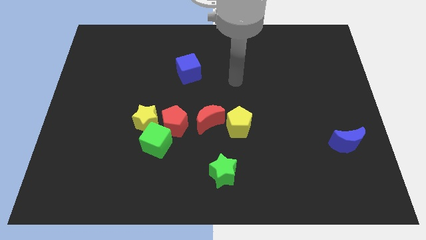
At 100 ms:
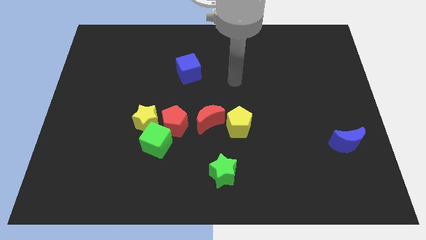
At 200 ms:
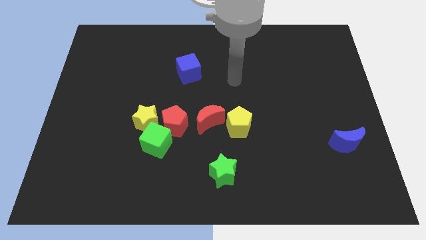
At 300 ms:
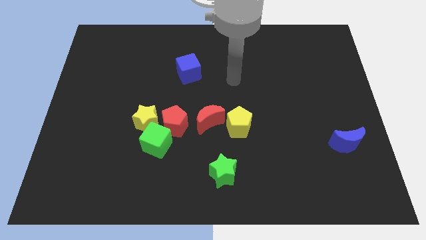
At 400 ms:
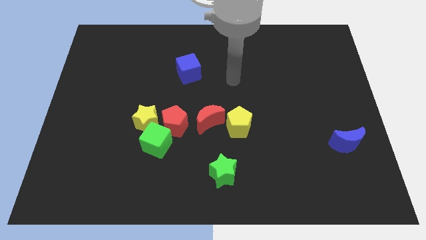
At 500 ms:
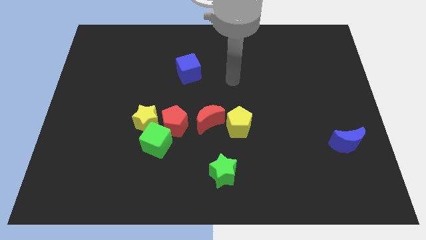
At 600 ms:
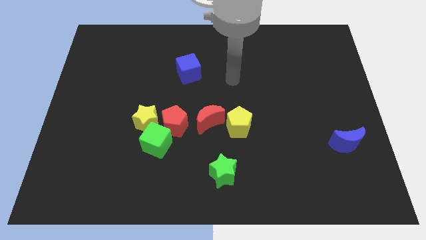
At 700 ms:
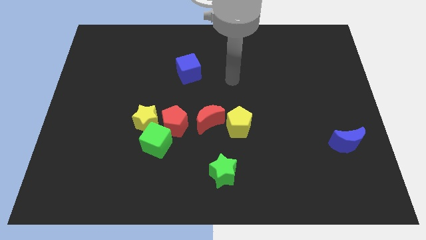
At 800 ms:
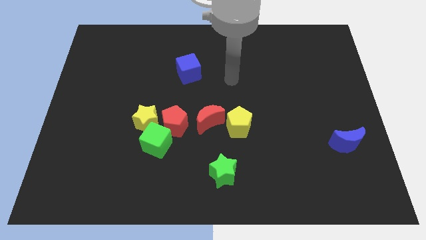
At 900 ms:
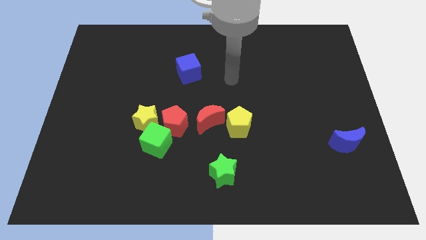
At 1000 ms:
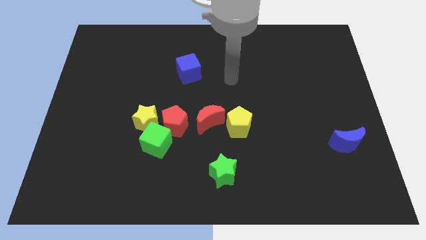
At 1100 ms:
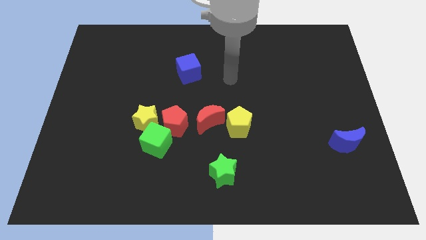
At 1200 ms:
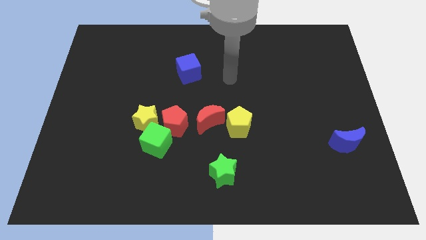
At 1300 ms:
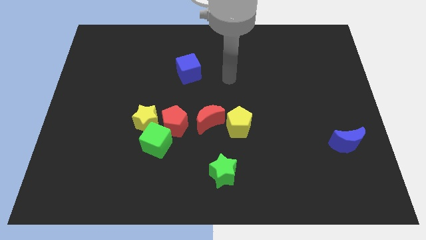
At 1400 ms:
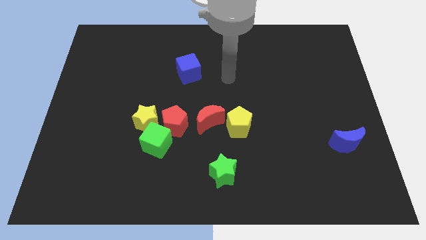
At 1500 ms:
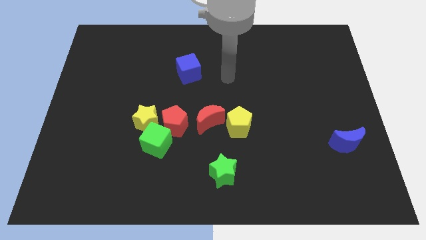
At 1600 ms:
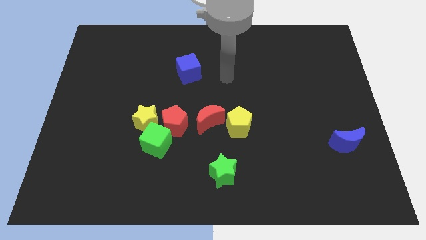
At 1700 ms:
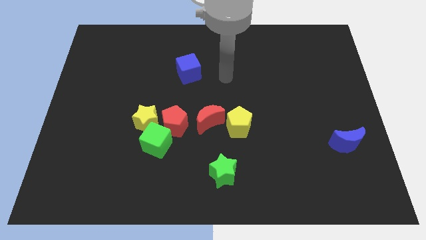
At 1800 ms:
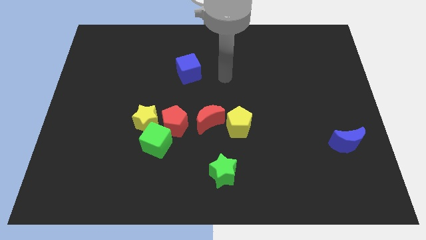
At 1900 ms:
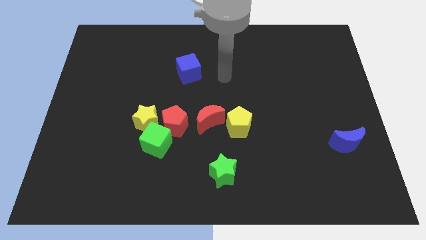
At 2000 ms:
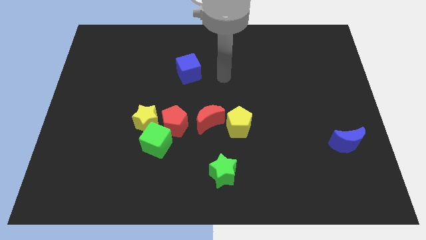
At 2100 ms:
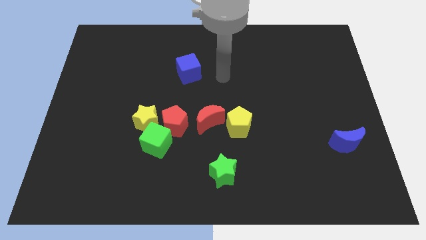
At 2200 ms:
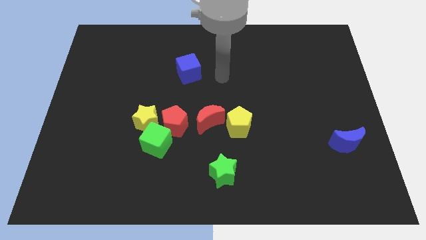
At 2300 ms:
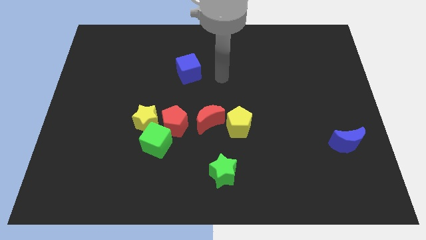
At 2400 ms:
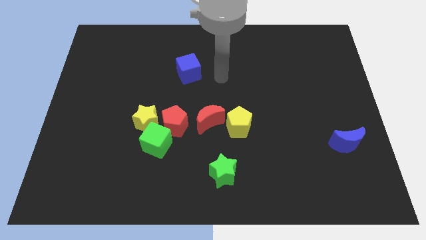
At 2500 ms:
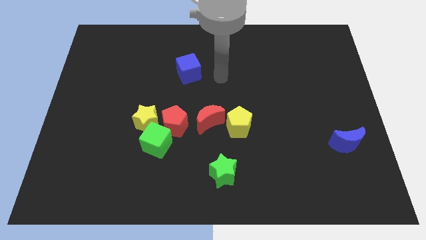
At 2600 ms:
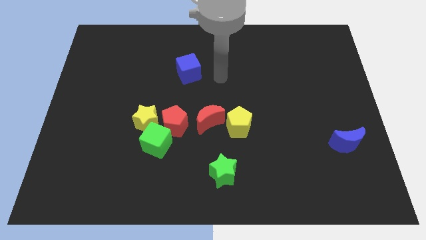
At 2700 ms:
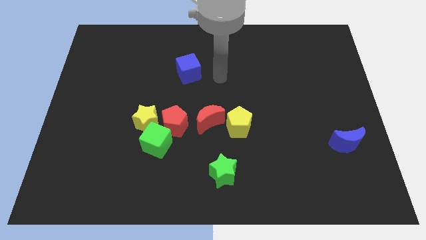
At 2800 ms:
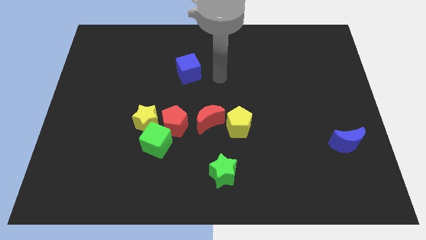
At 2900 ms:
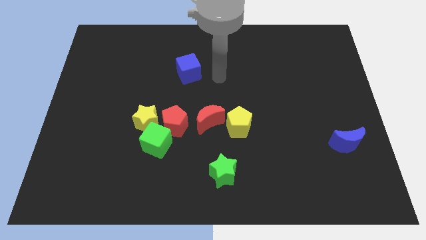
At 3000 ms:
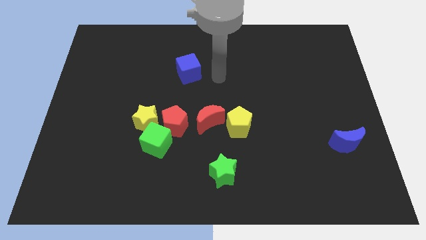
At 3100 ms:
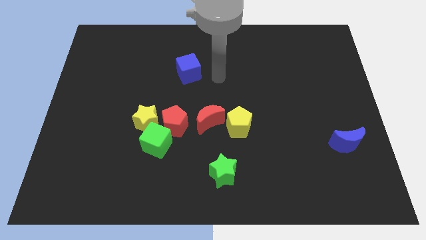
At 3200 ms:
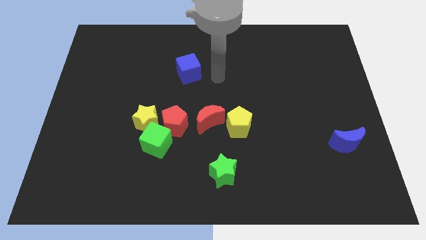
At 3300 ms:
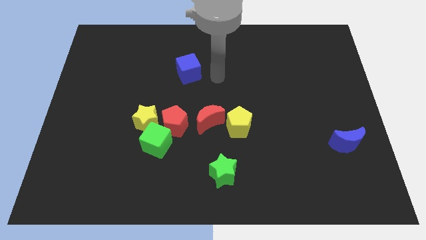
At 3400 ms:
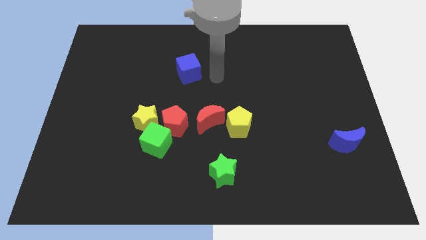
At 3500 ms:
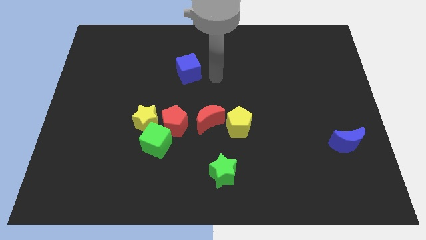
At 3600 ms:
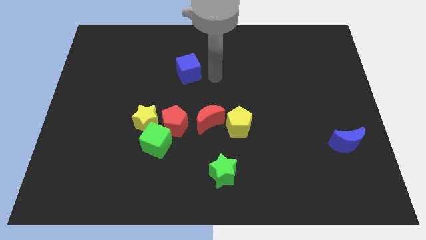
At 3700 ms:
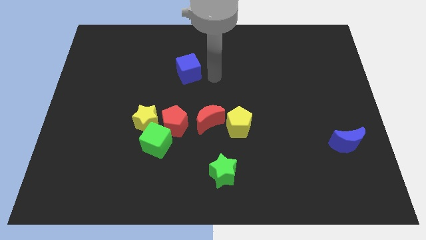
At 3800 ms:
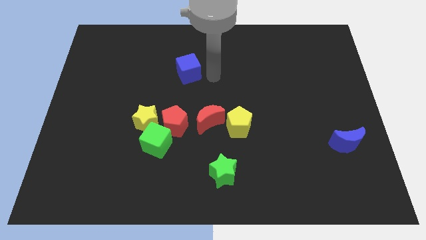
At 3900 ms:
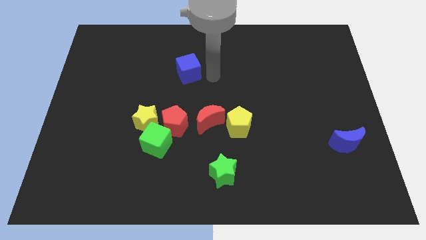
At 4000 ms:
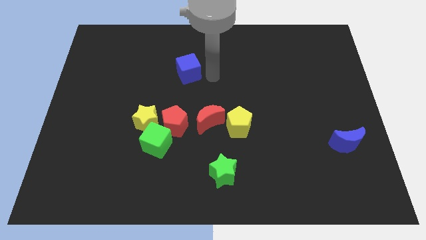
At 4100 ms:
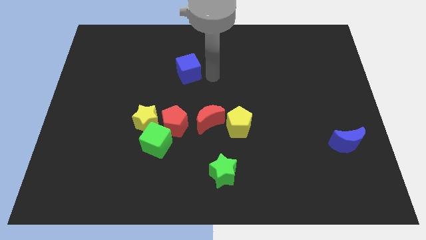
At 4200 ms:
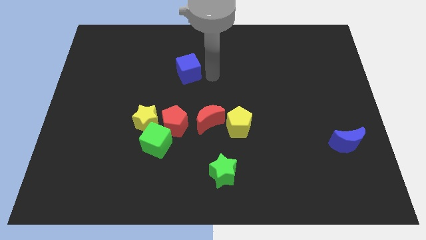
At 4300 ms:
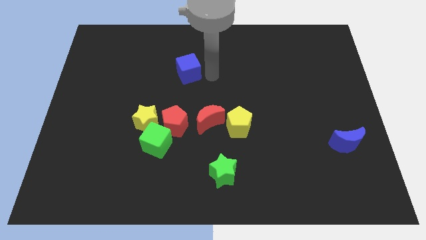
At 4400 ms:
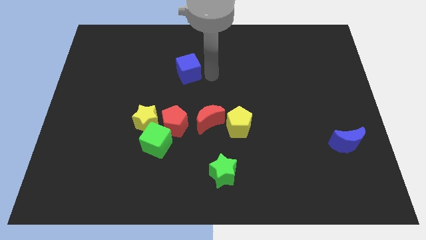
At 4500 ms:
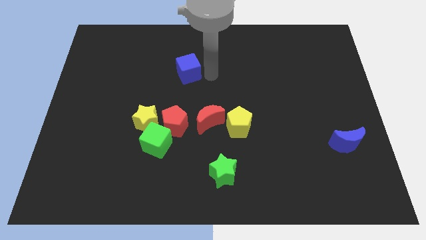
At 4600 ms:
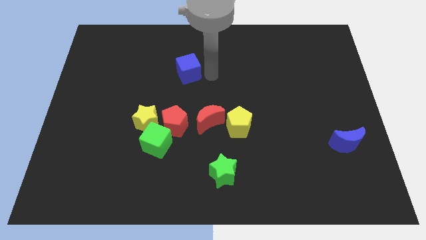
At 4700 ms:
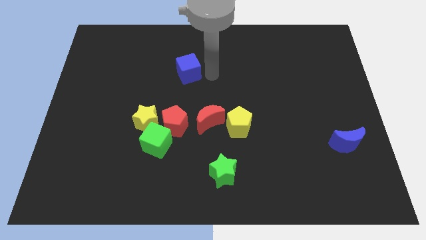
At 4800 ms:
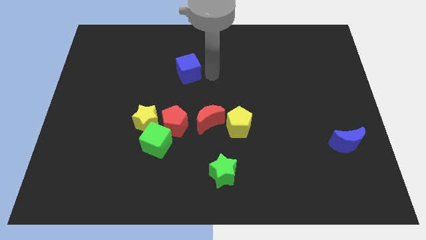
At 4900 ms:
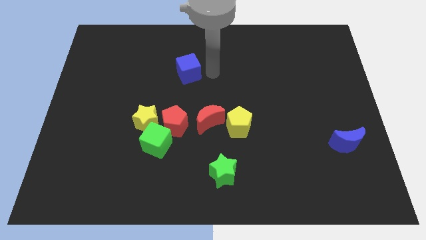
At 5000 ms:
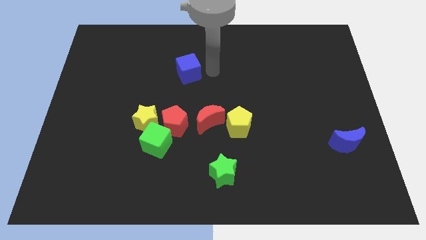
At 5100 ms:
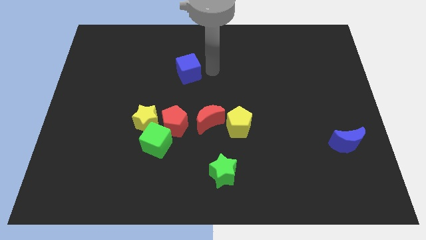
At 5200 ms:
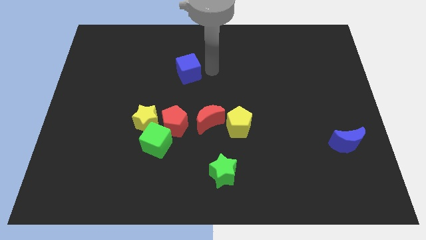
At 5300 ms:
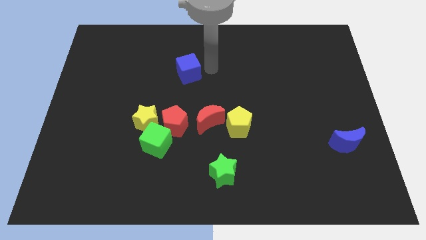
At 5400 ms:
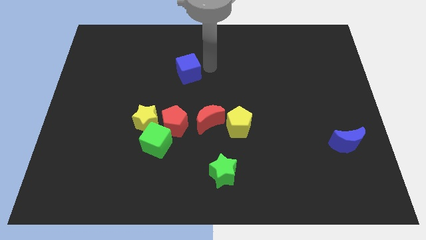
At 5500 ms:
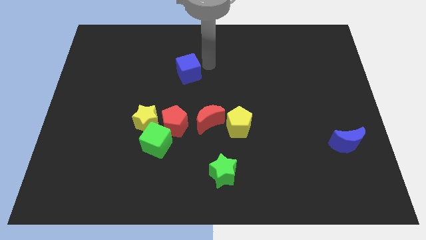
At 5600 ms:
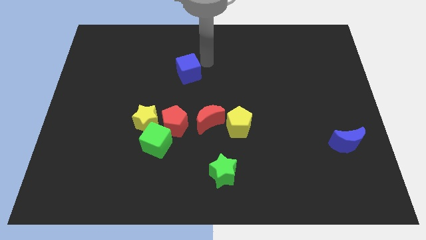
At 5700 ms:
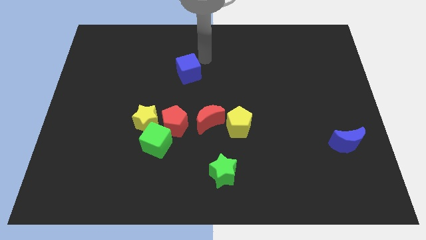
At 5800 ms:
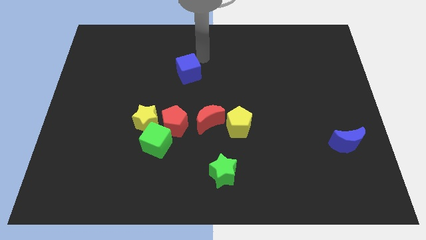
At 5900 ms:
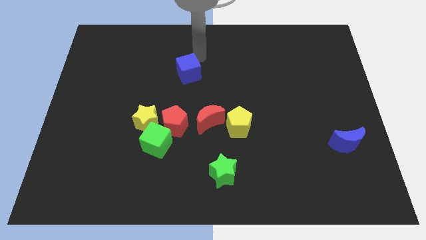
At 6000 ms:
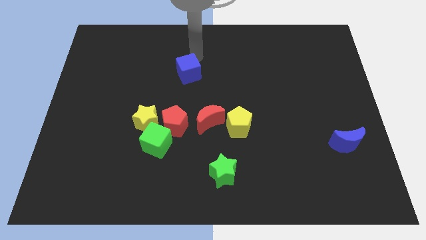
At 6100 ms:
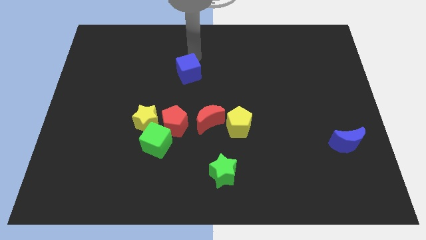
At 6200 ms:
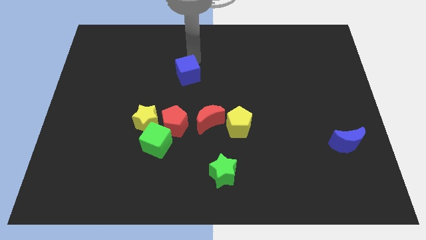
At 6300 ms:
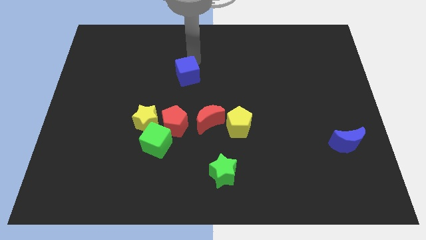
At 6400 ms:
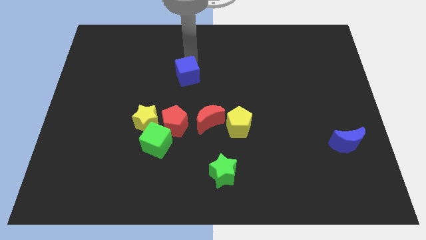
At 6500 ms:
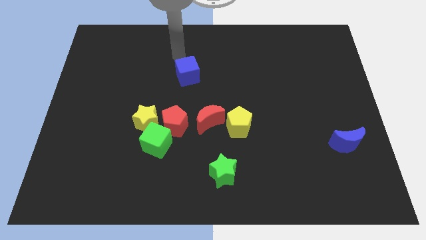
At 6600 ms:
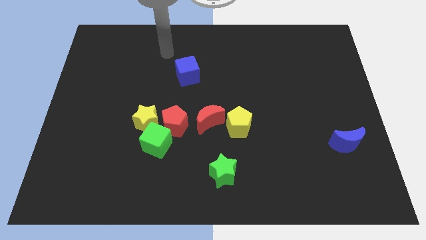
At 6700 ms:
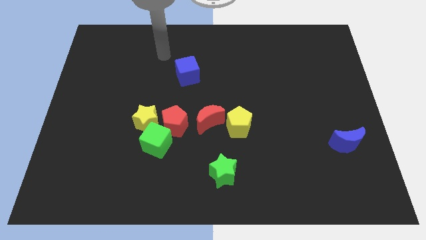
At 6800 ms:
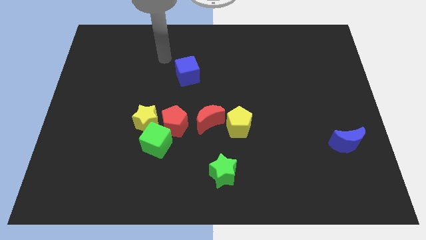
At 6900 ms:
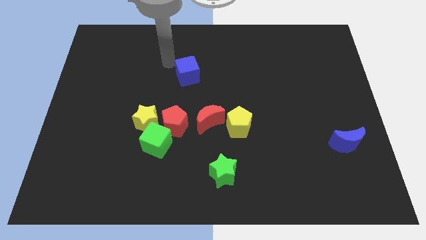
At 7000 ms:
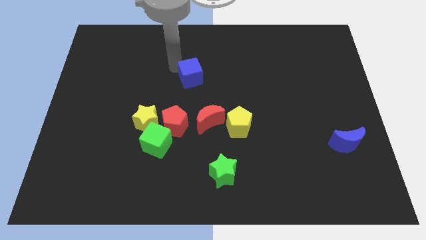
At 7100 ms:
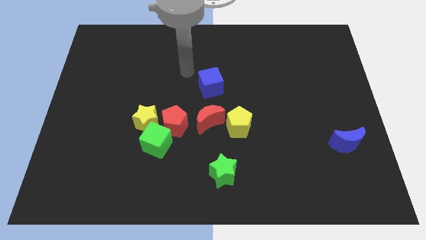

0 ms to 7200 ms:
move the blue cube towards the center of the board

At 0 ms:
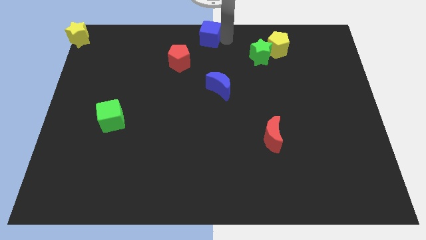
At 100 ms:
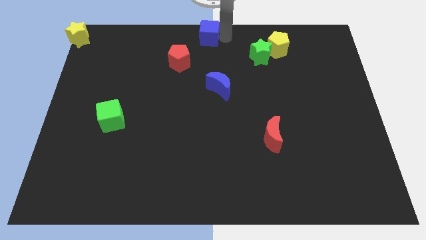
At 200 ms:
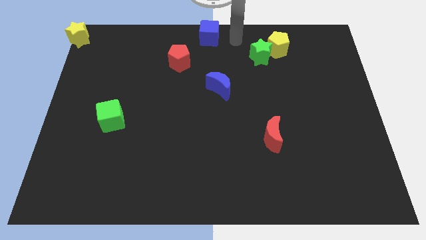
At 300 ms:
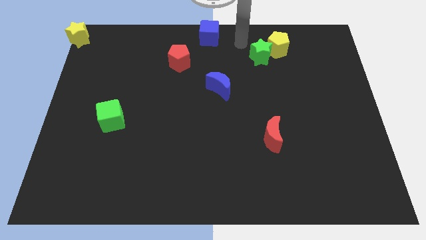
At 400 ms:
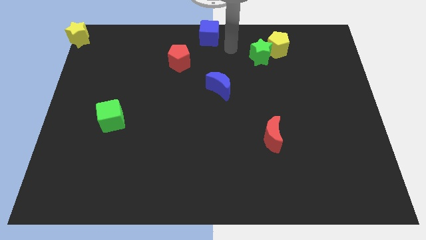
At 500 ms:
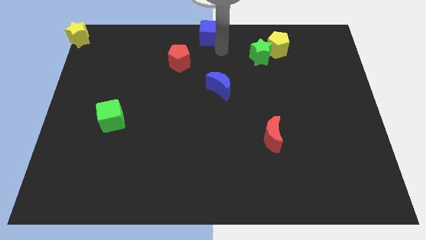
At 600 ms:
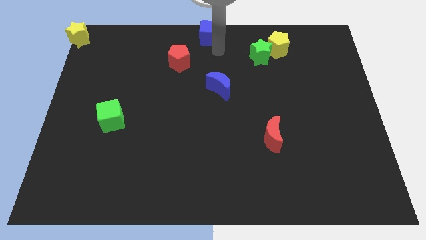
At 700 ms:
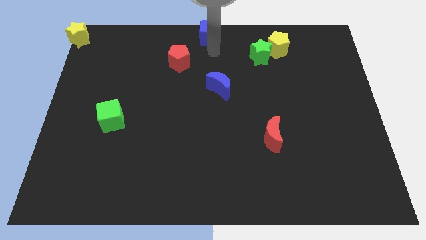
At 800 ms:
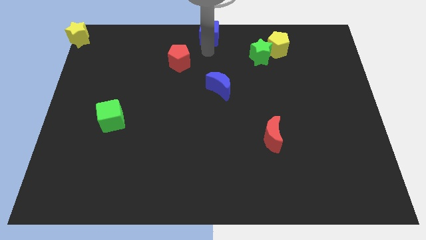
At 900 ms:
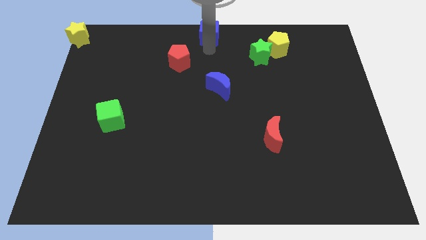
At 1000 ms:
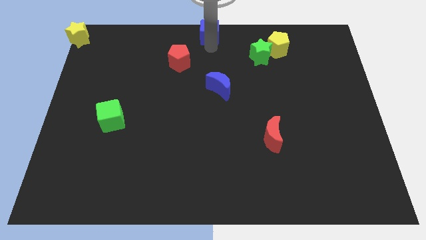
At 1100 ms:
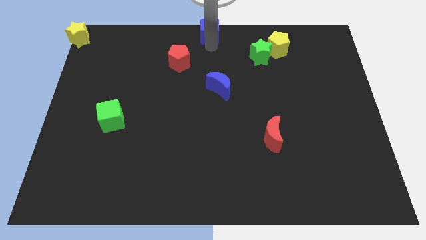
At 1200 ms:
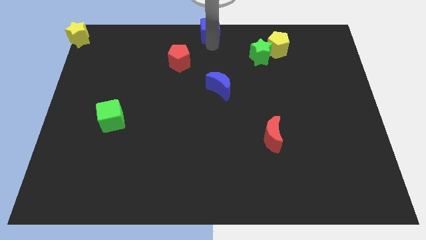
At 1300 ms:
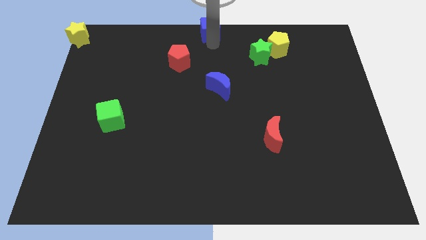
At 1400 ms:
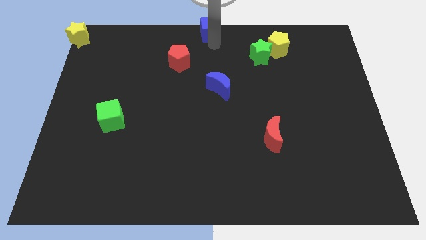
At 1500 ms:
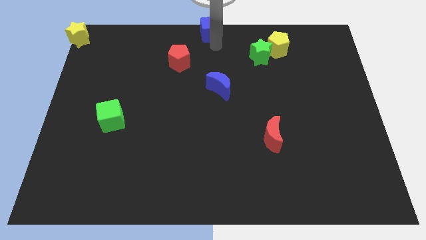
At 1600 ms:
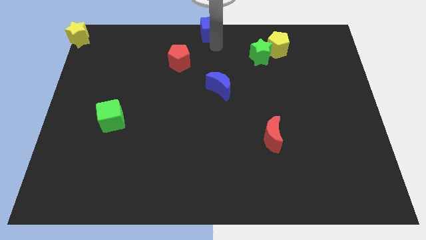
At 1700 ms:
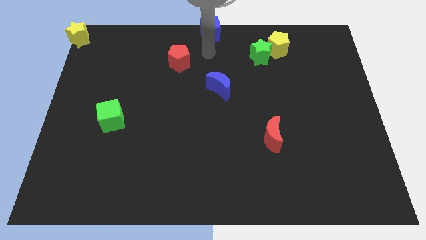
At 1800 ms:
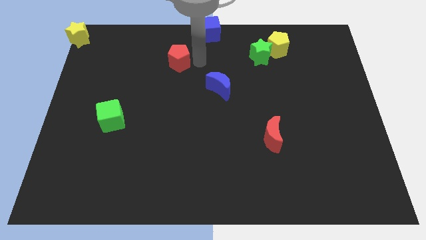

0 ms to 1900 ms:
put the blue cube at the top center of the board
